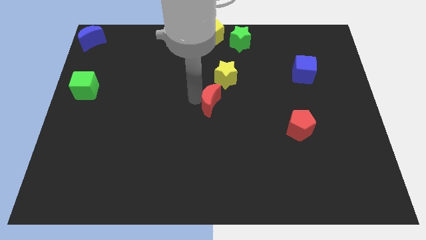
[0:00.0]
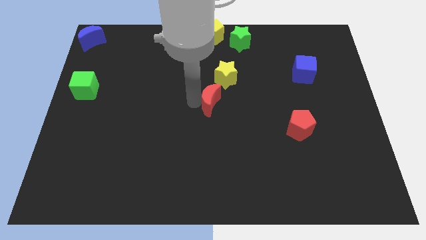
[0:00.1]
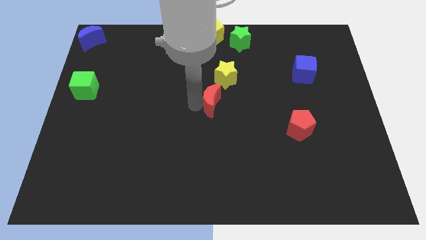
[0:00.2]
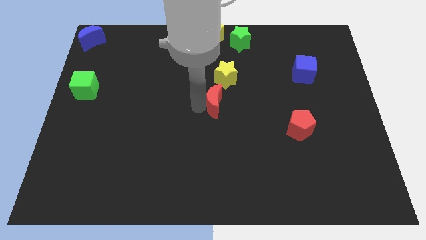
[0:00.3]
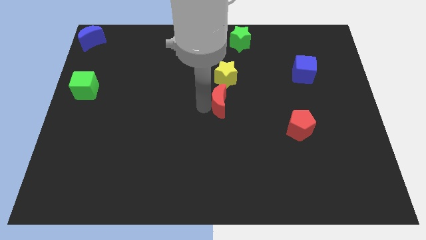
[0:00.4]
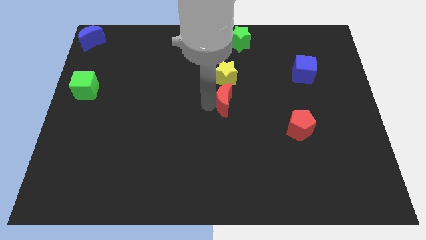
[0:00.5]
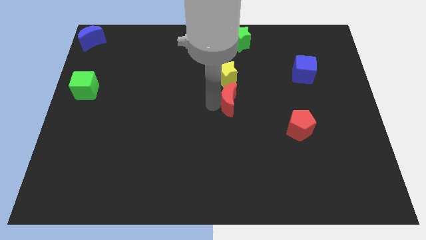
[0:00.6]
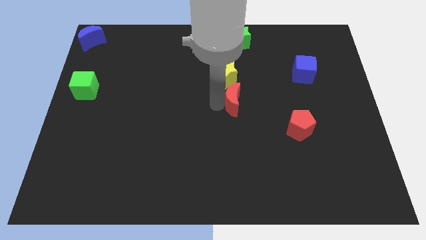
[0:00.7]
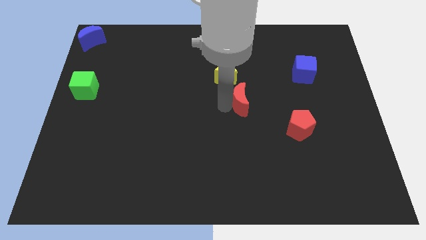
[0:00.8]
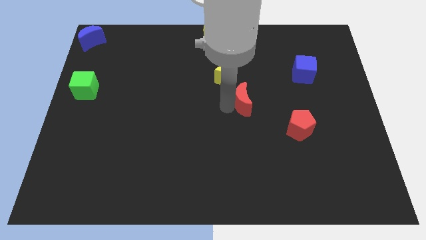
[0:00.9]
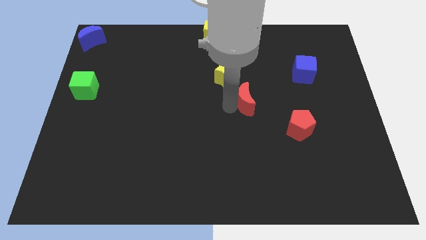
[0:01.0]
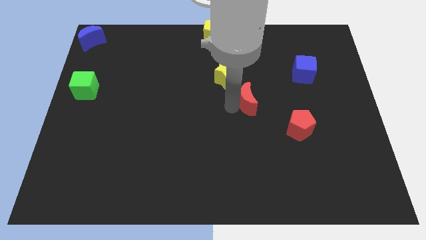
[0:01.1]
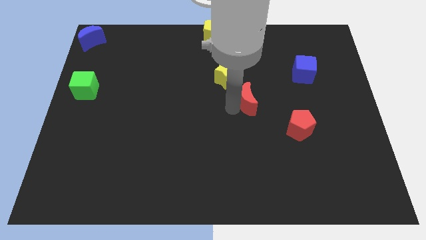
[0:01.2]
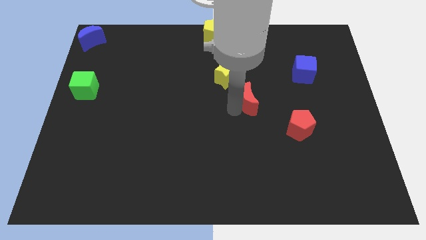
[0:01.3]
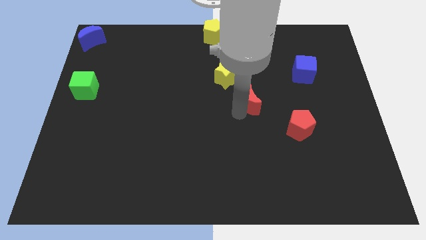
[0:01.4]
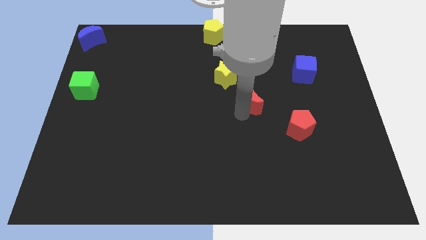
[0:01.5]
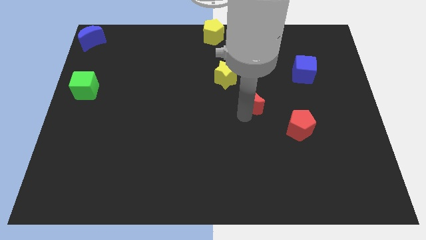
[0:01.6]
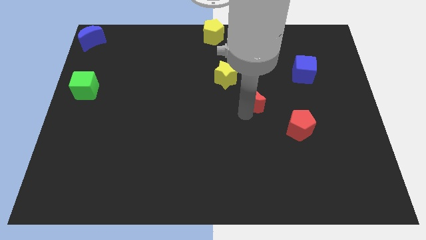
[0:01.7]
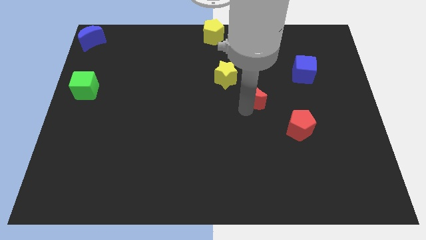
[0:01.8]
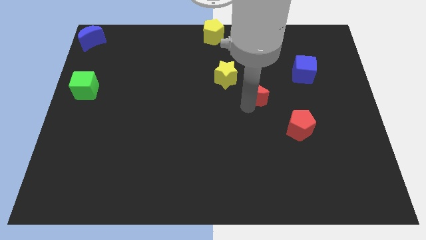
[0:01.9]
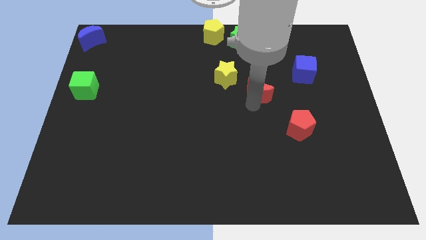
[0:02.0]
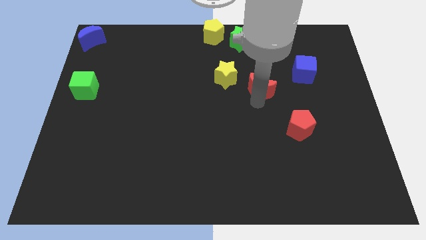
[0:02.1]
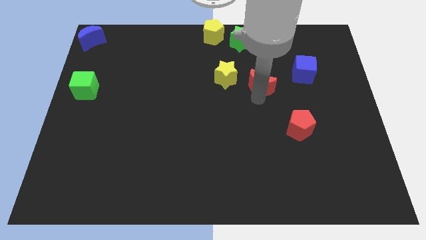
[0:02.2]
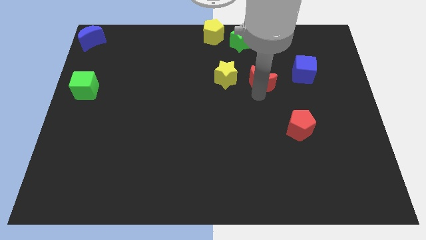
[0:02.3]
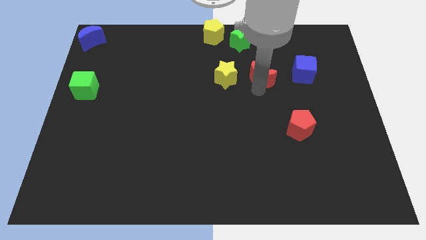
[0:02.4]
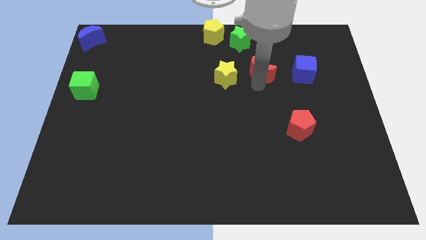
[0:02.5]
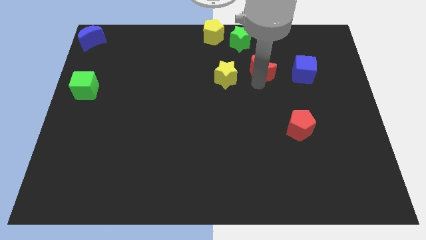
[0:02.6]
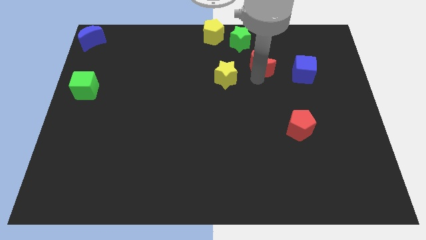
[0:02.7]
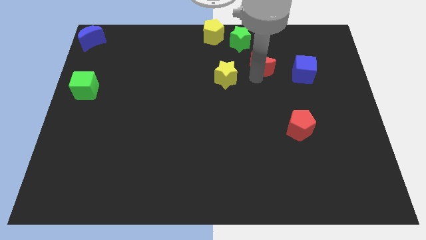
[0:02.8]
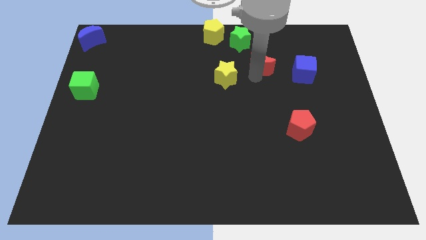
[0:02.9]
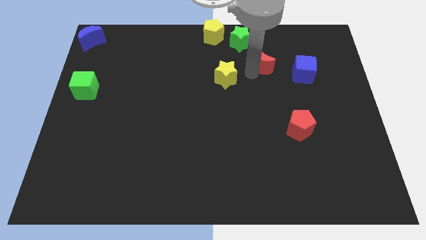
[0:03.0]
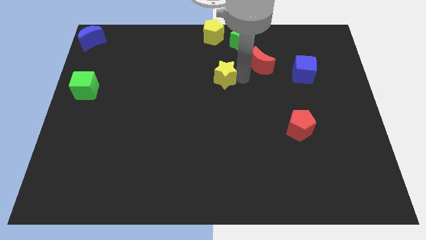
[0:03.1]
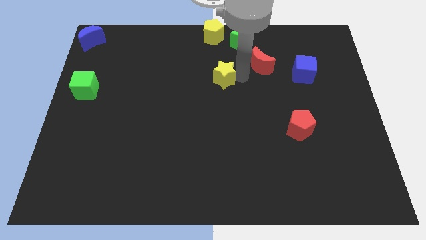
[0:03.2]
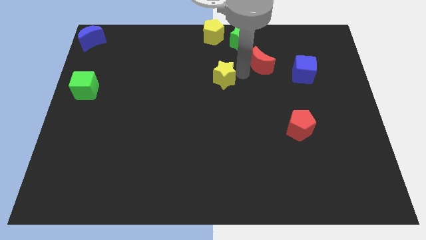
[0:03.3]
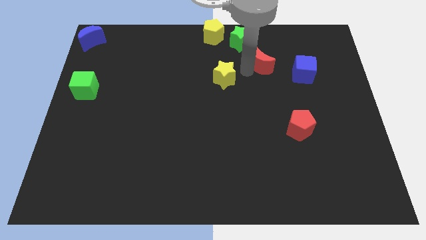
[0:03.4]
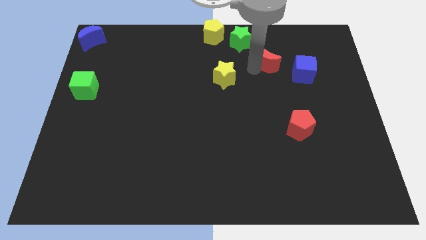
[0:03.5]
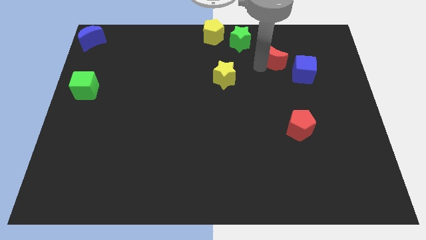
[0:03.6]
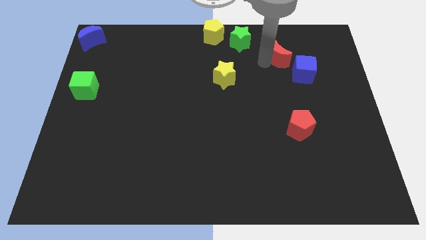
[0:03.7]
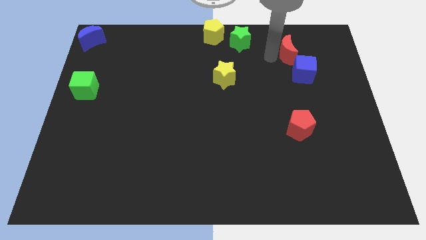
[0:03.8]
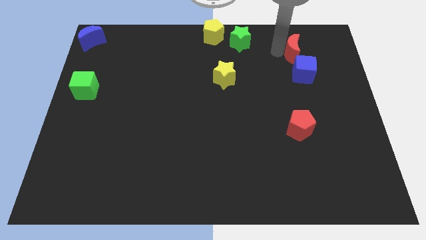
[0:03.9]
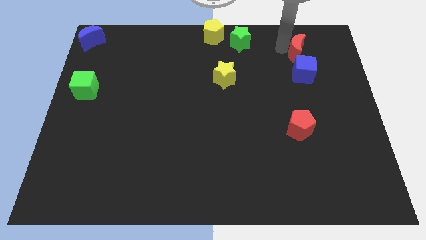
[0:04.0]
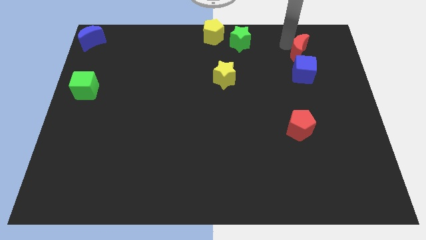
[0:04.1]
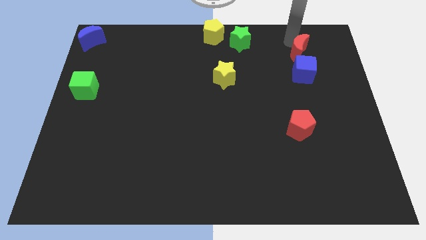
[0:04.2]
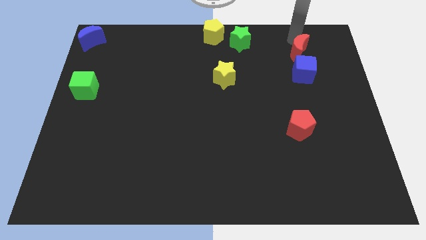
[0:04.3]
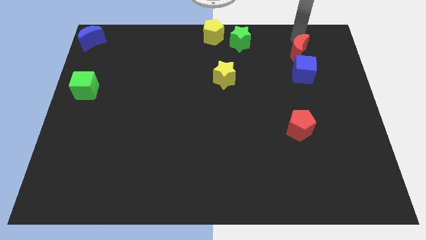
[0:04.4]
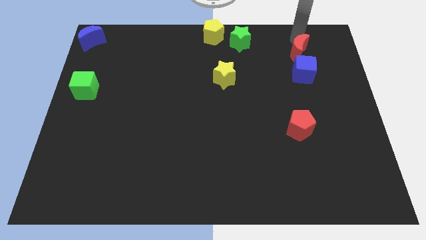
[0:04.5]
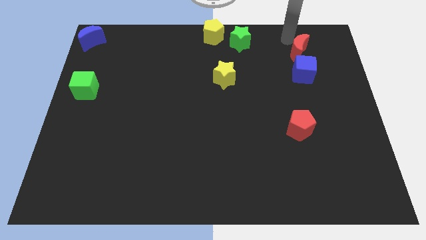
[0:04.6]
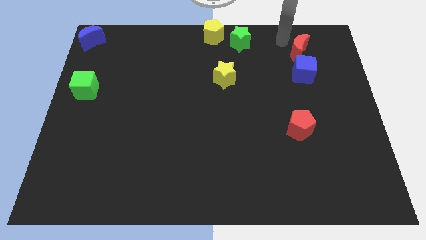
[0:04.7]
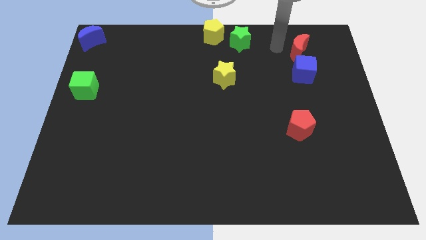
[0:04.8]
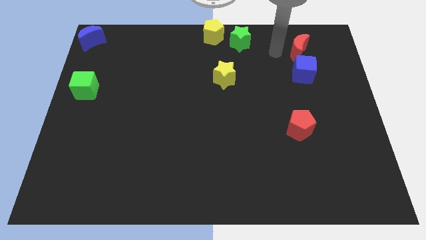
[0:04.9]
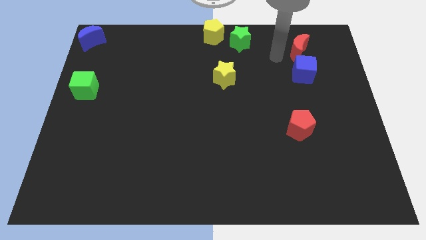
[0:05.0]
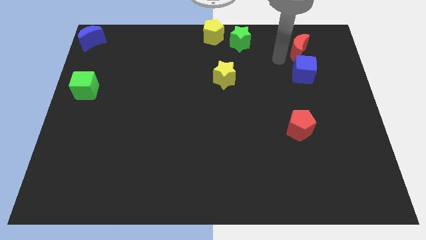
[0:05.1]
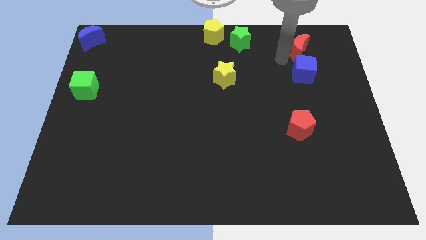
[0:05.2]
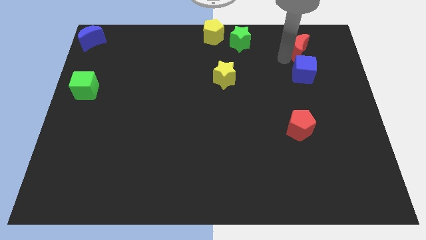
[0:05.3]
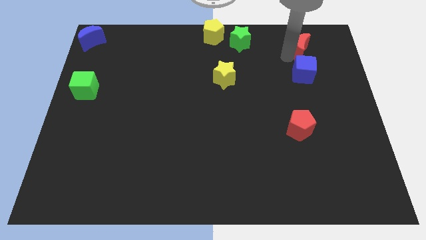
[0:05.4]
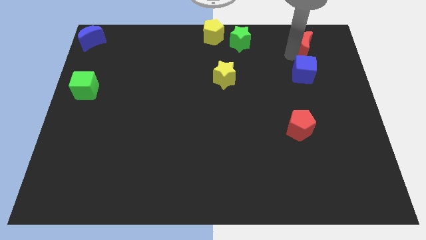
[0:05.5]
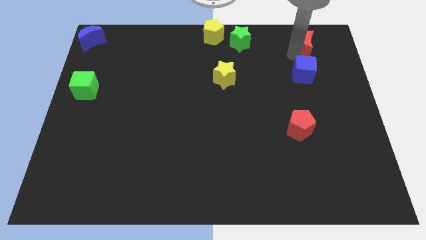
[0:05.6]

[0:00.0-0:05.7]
place the red moon above the blue cube

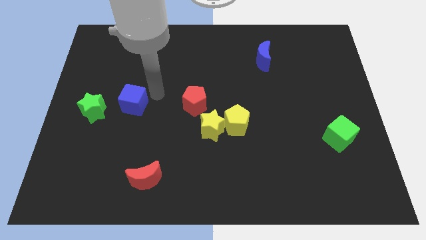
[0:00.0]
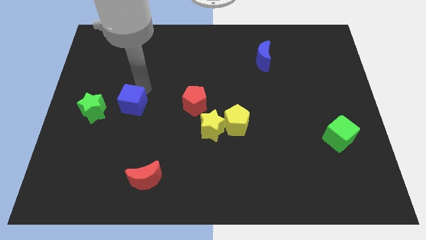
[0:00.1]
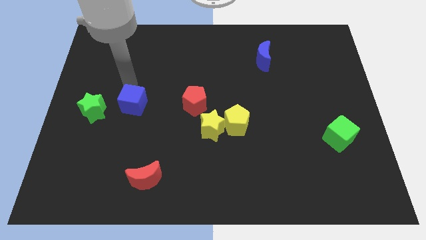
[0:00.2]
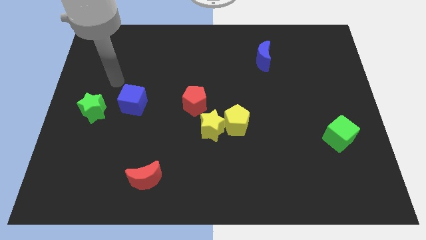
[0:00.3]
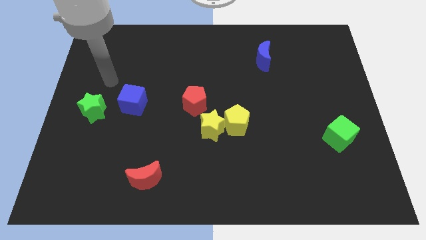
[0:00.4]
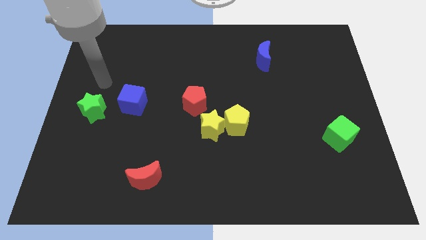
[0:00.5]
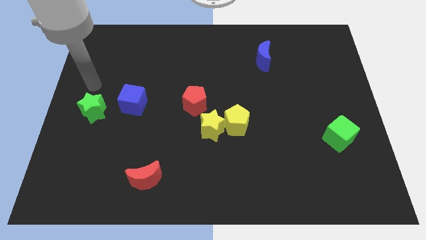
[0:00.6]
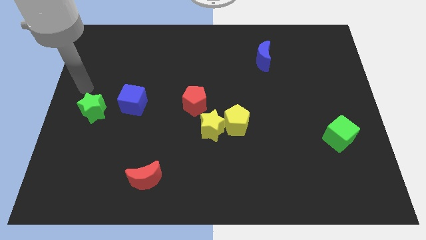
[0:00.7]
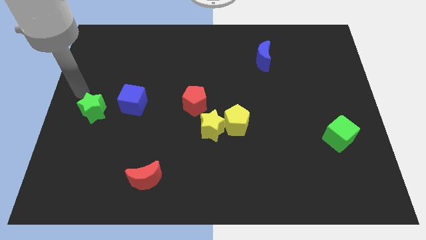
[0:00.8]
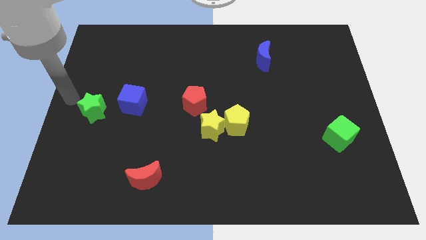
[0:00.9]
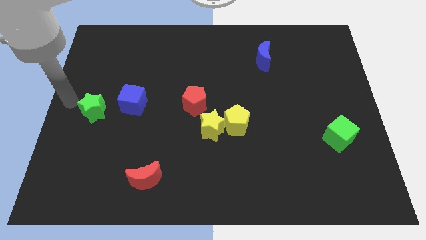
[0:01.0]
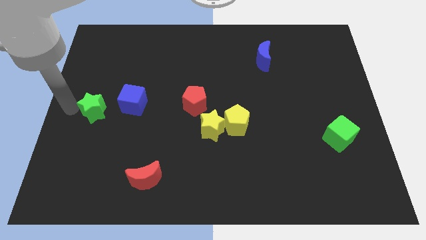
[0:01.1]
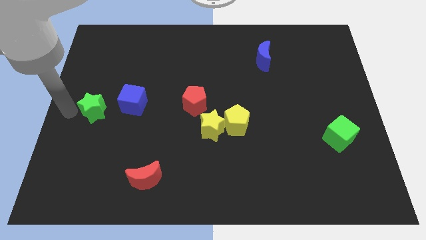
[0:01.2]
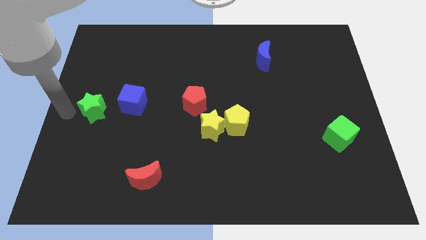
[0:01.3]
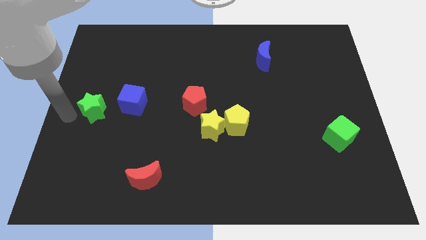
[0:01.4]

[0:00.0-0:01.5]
point the arm to the left of the green star

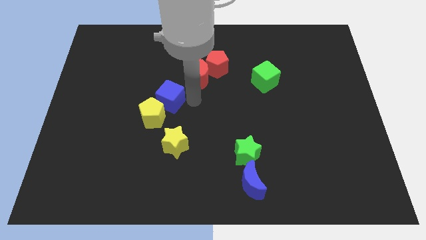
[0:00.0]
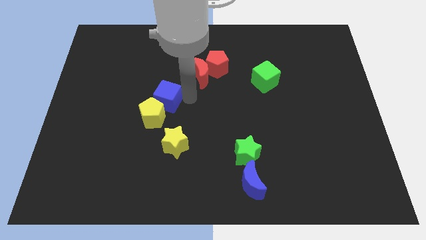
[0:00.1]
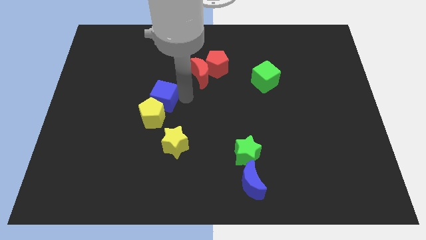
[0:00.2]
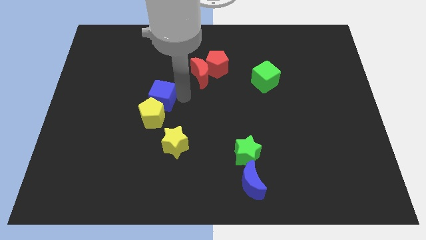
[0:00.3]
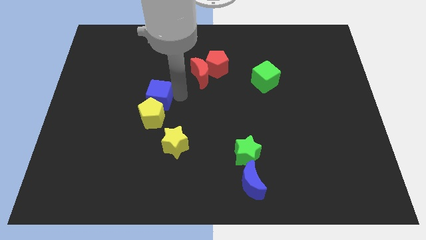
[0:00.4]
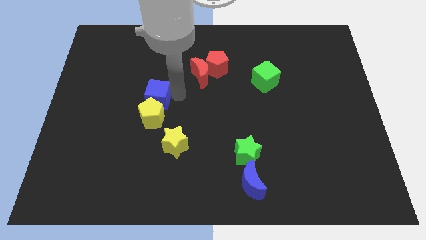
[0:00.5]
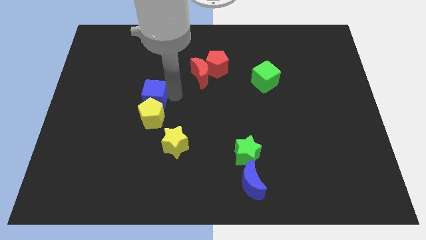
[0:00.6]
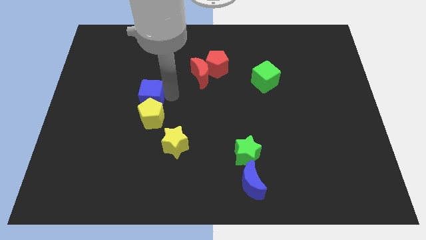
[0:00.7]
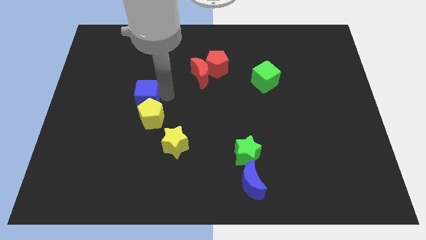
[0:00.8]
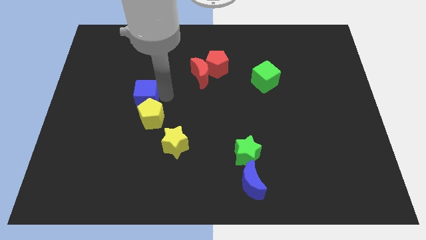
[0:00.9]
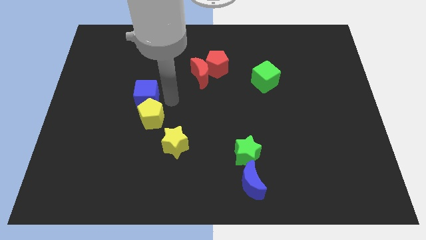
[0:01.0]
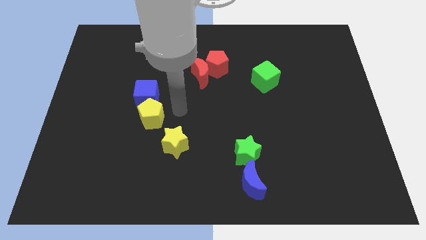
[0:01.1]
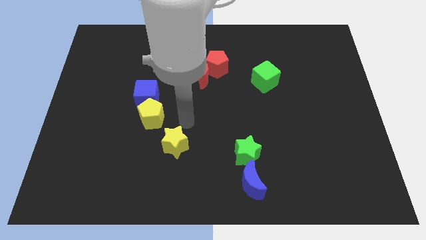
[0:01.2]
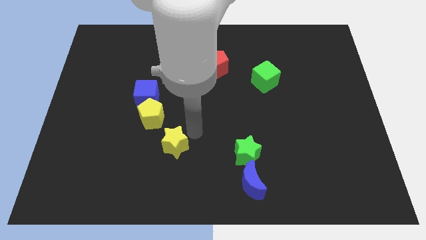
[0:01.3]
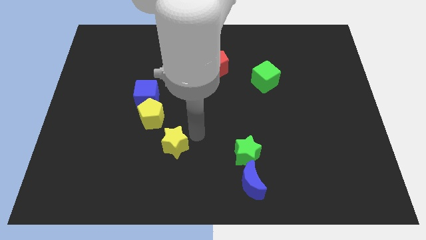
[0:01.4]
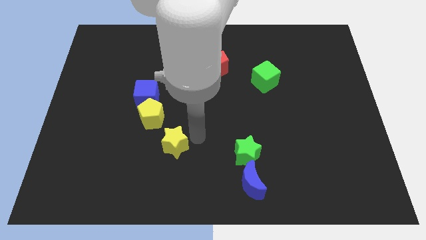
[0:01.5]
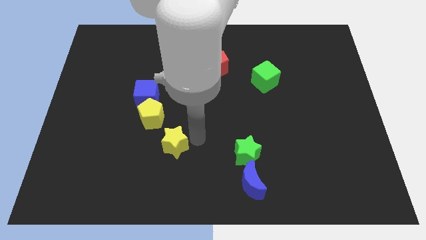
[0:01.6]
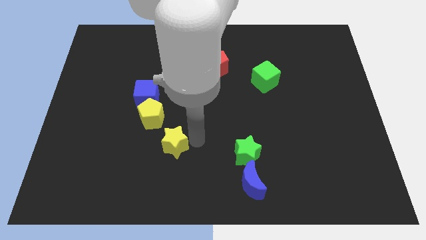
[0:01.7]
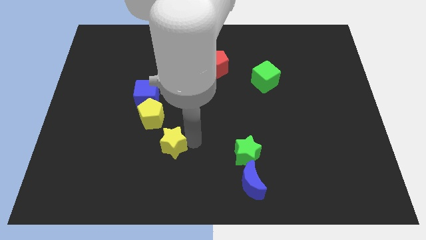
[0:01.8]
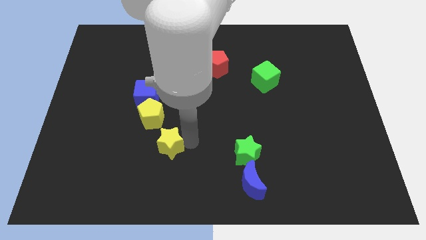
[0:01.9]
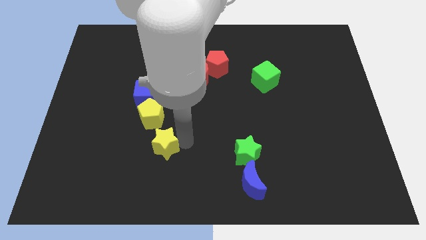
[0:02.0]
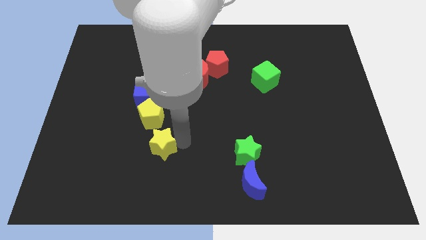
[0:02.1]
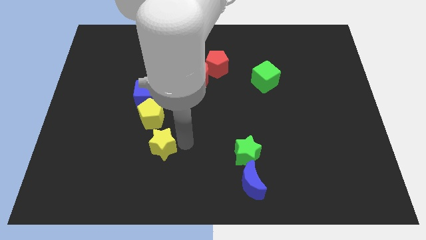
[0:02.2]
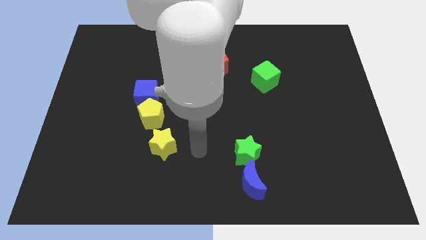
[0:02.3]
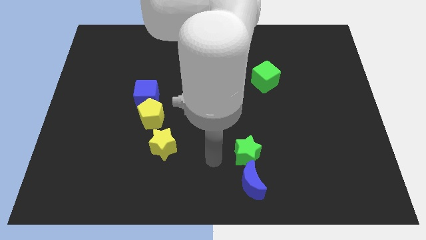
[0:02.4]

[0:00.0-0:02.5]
push the blue cube and yellow star to the left
